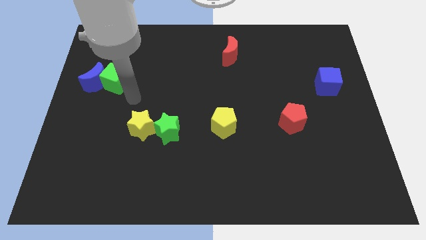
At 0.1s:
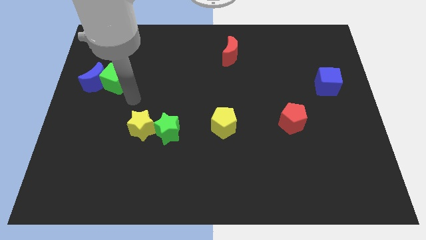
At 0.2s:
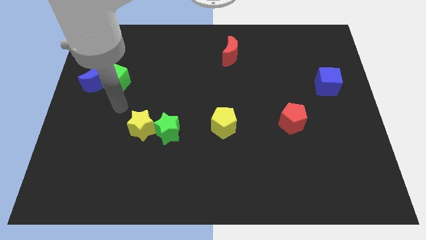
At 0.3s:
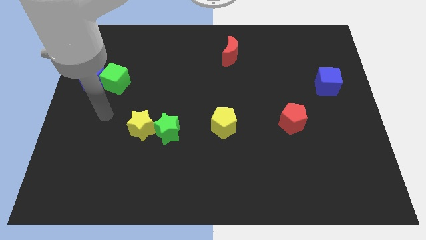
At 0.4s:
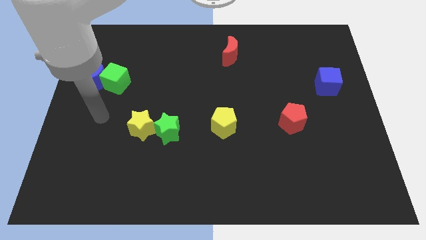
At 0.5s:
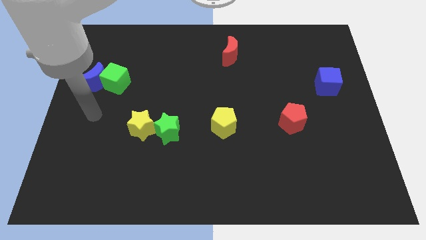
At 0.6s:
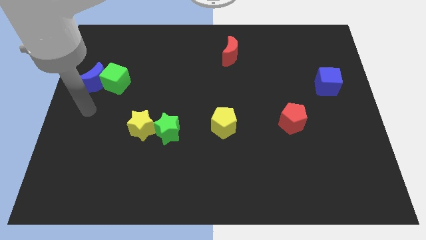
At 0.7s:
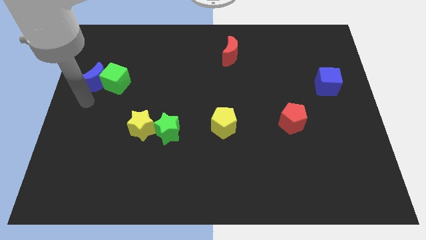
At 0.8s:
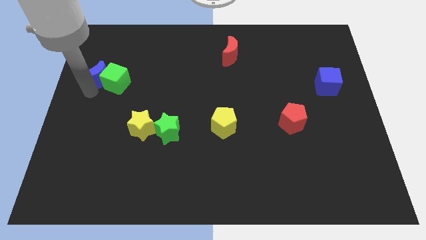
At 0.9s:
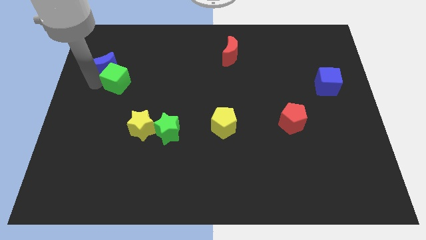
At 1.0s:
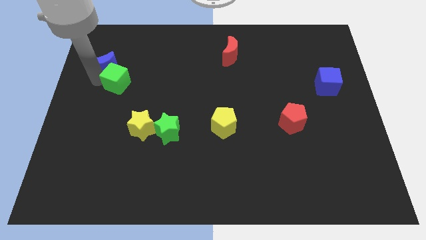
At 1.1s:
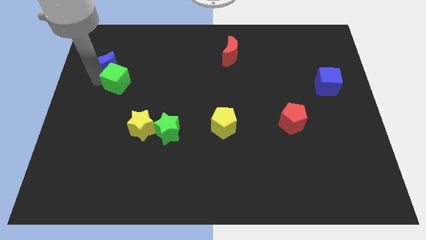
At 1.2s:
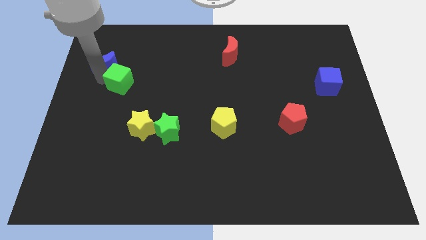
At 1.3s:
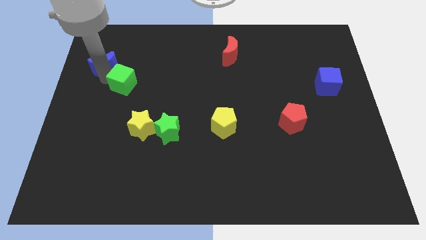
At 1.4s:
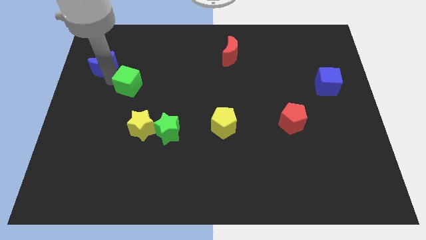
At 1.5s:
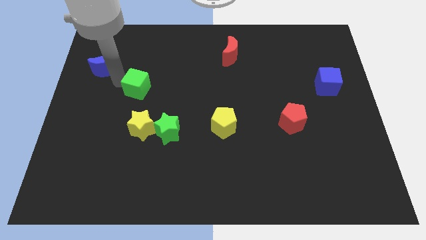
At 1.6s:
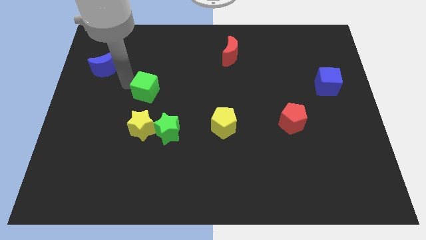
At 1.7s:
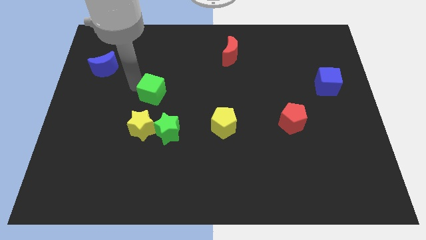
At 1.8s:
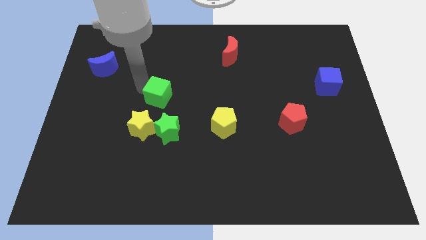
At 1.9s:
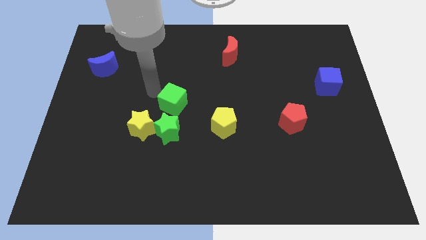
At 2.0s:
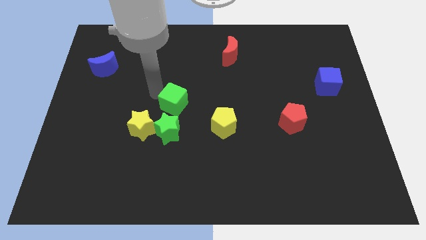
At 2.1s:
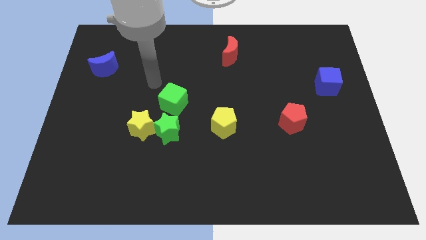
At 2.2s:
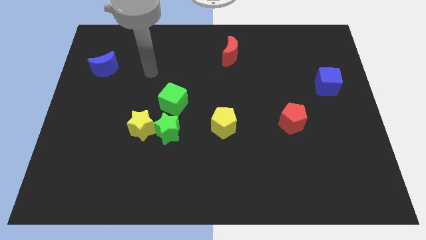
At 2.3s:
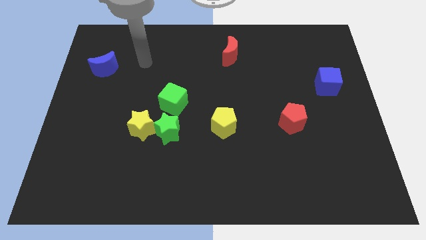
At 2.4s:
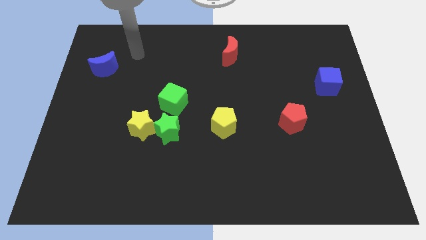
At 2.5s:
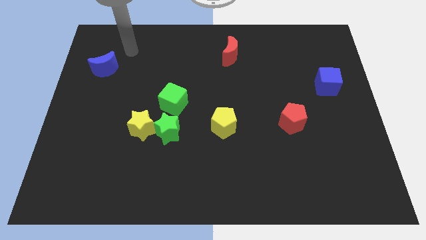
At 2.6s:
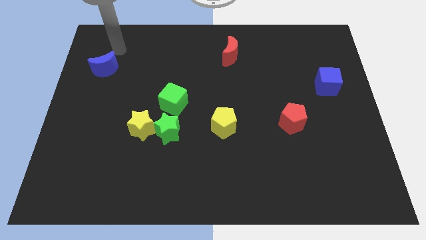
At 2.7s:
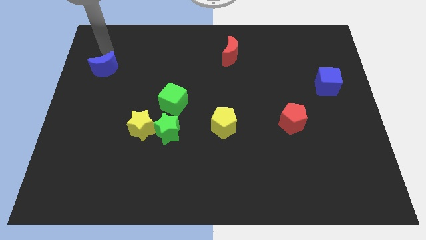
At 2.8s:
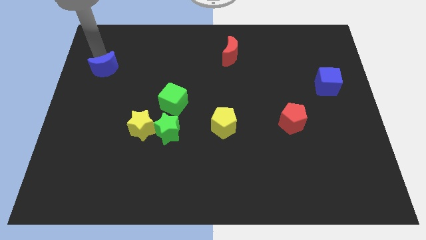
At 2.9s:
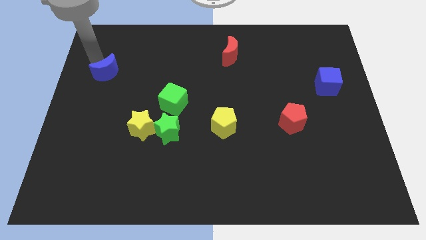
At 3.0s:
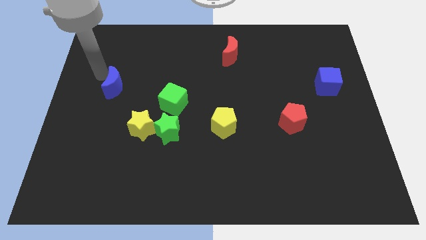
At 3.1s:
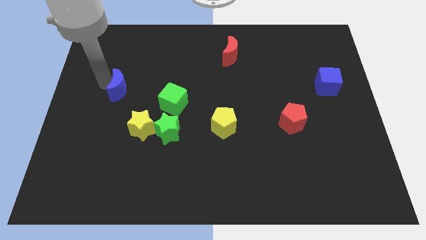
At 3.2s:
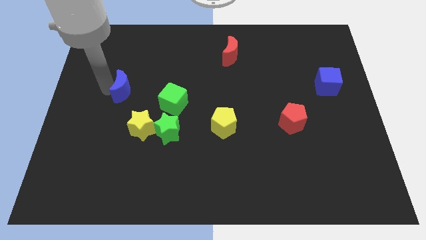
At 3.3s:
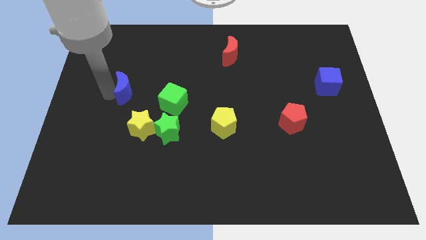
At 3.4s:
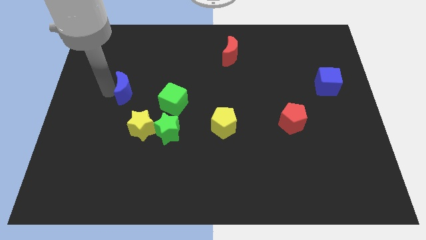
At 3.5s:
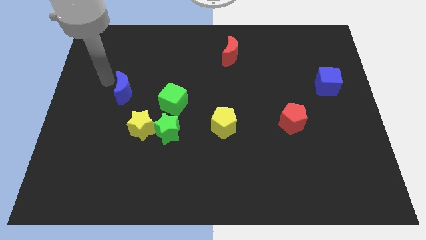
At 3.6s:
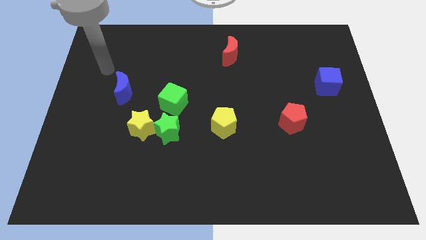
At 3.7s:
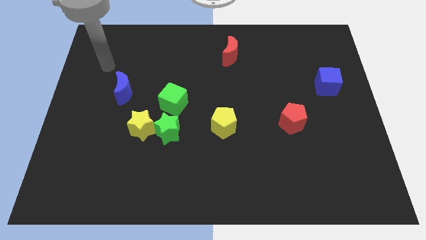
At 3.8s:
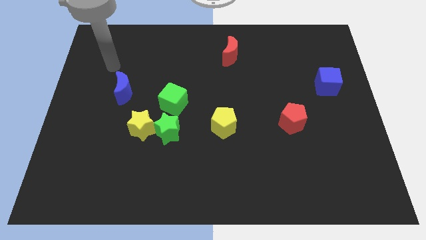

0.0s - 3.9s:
push the blue moon and green cube towards the bottom side of the board

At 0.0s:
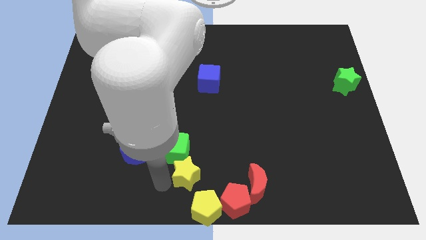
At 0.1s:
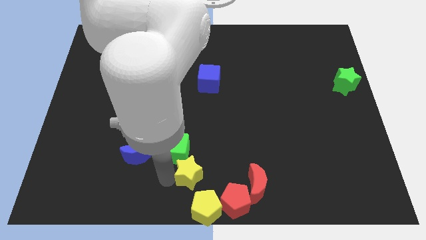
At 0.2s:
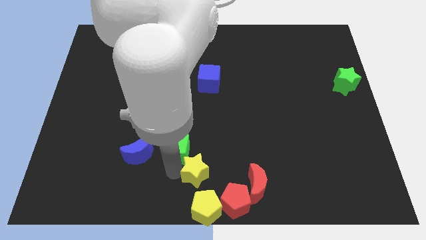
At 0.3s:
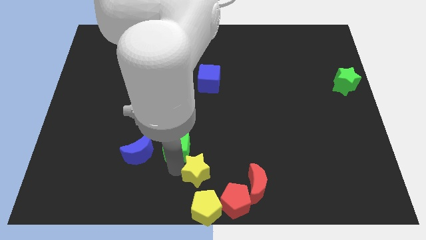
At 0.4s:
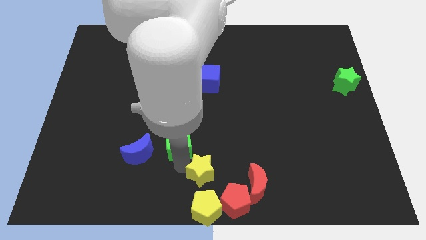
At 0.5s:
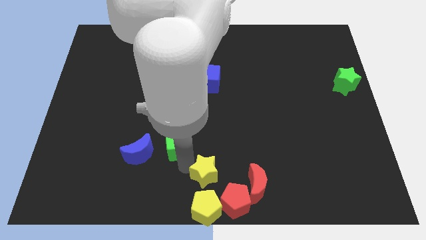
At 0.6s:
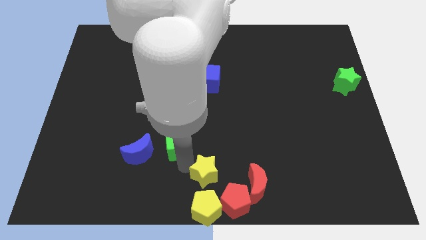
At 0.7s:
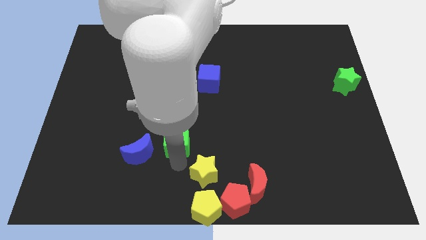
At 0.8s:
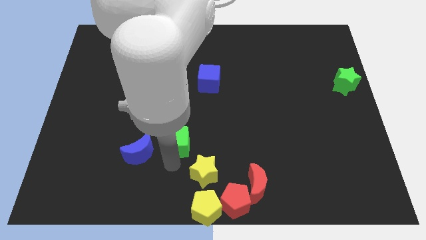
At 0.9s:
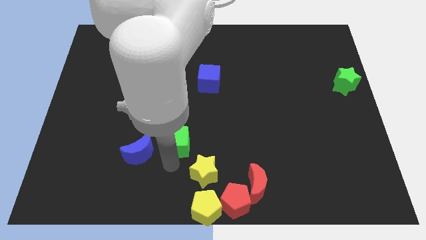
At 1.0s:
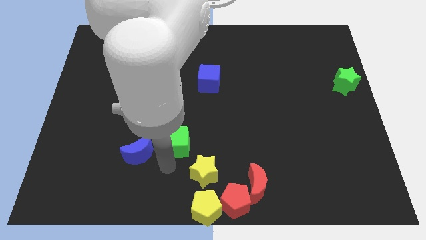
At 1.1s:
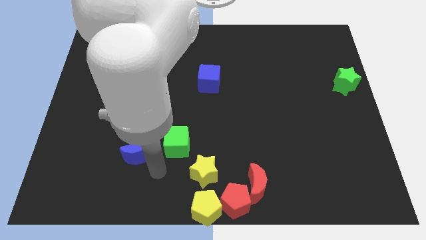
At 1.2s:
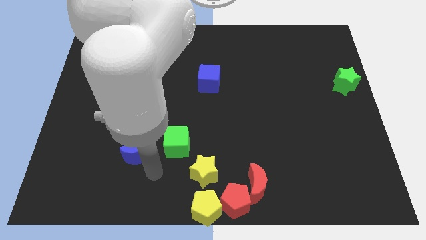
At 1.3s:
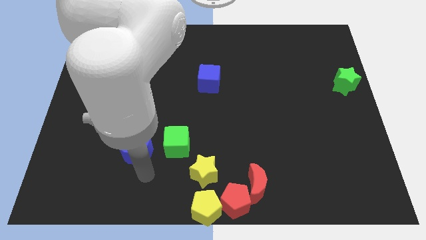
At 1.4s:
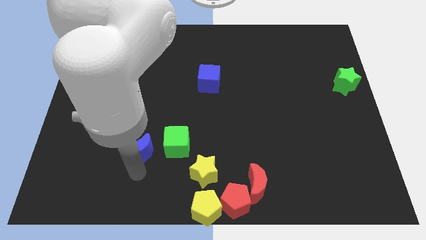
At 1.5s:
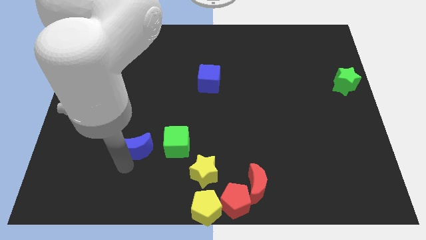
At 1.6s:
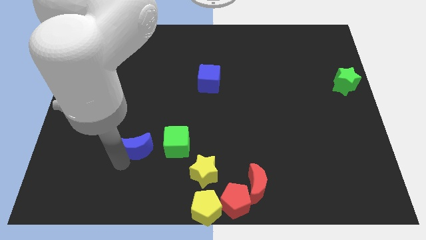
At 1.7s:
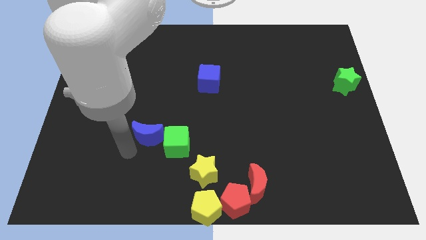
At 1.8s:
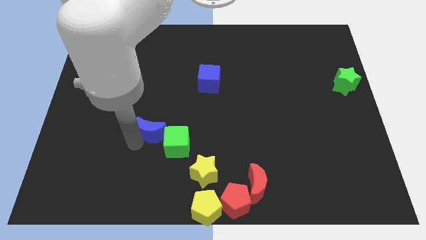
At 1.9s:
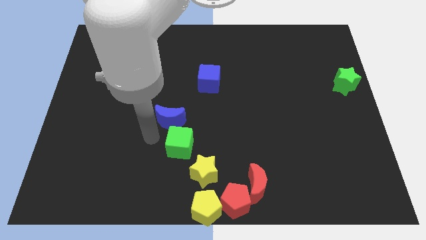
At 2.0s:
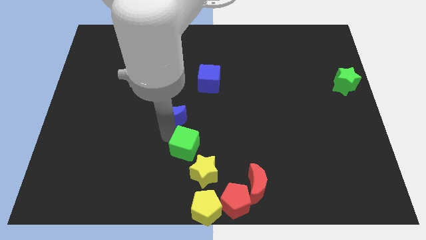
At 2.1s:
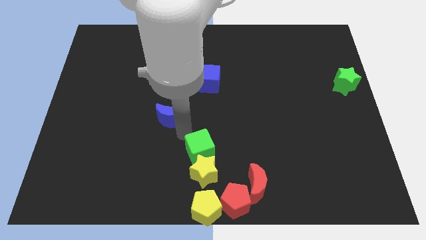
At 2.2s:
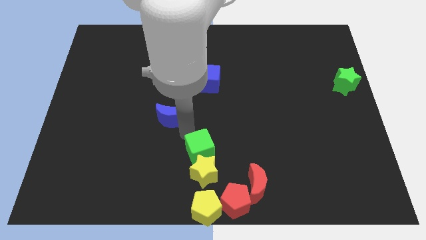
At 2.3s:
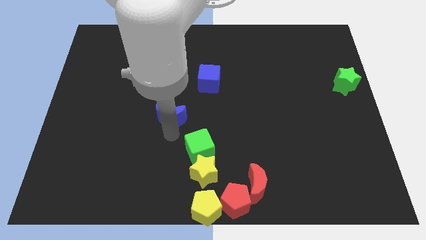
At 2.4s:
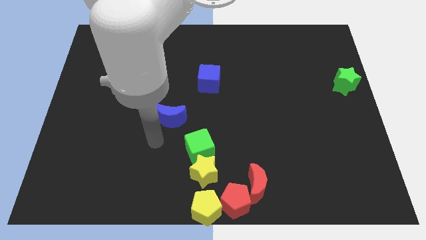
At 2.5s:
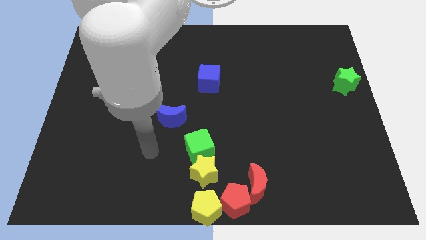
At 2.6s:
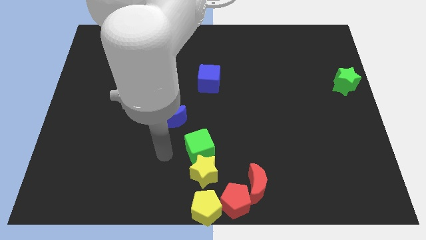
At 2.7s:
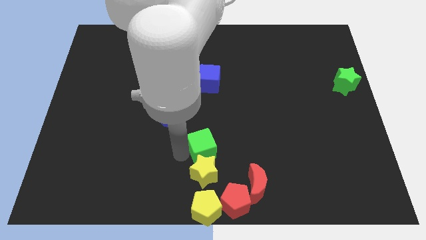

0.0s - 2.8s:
place the green cube above the yellow star

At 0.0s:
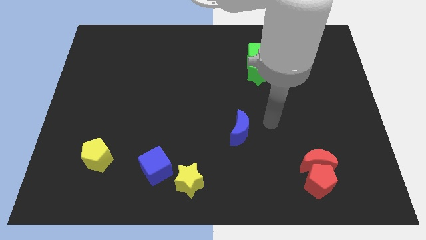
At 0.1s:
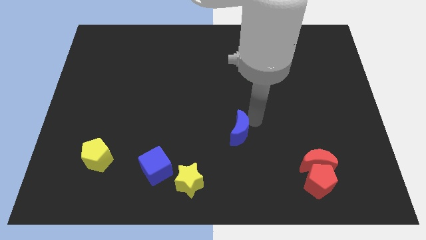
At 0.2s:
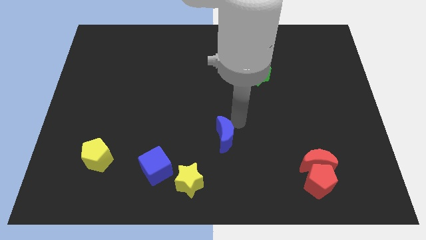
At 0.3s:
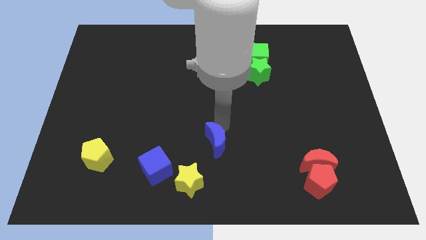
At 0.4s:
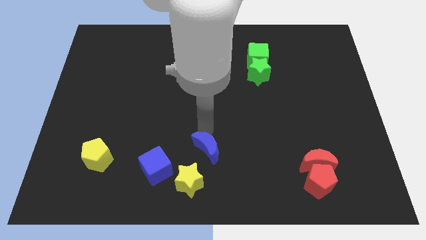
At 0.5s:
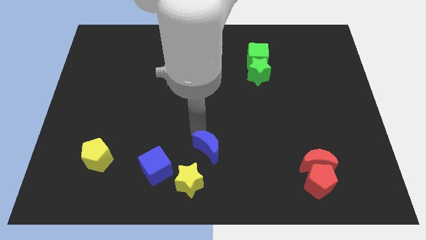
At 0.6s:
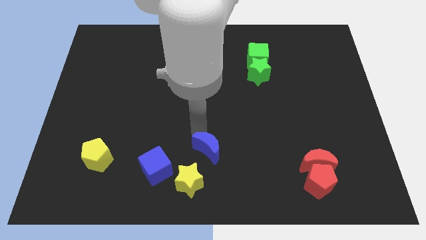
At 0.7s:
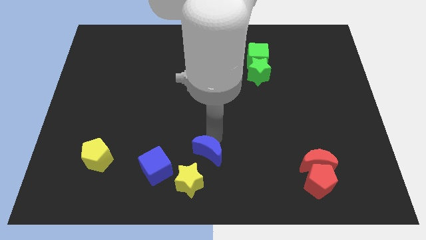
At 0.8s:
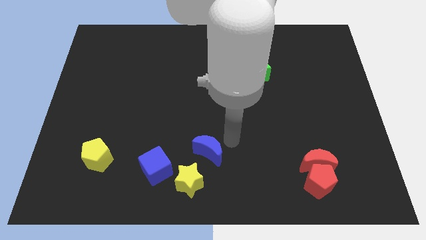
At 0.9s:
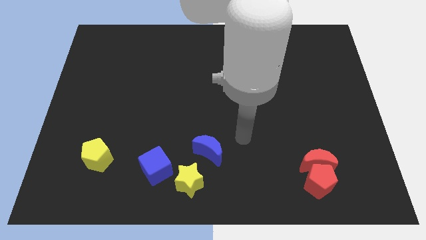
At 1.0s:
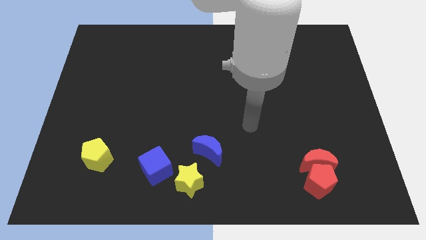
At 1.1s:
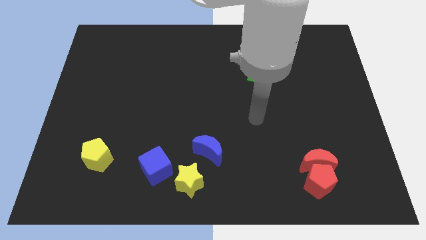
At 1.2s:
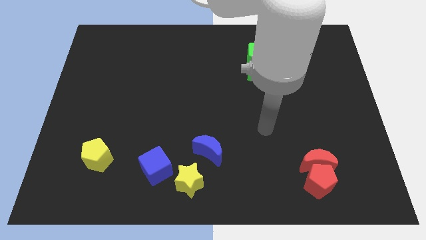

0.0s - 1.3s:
put the blue moon diagonally right to the yellow star

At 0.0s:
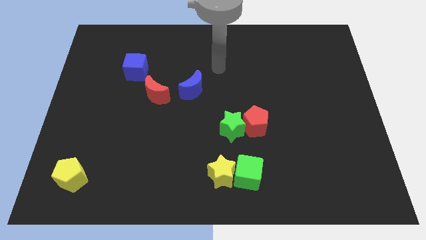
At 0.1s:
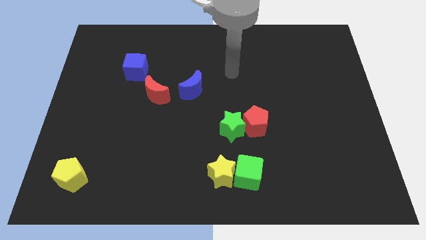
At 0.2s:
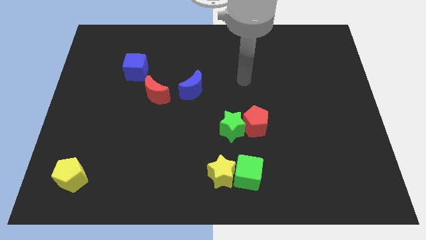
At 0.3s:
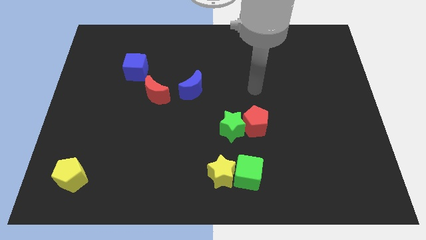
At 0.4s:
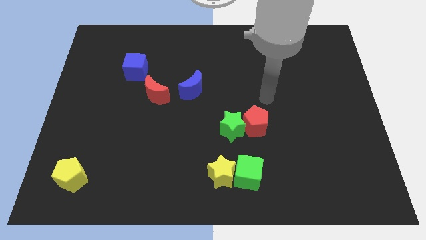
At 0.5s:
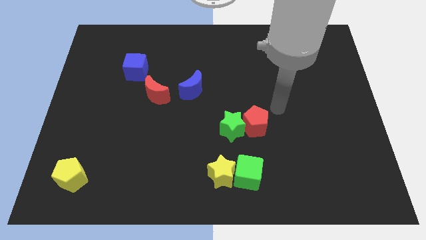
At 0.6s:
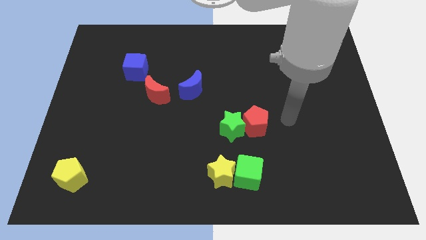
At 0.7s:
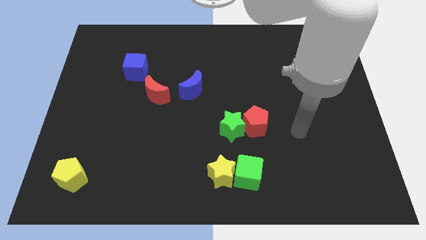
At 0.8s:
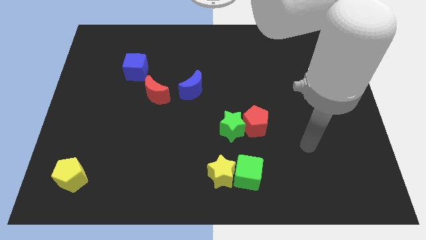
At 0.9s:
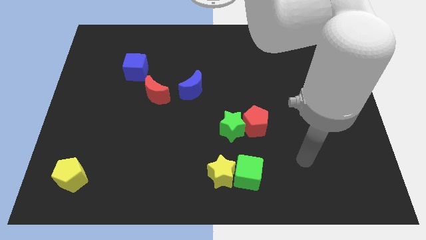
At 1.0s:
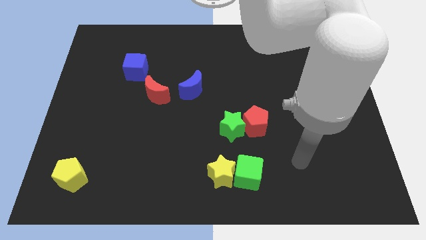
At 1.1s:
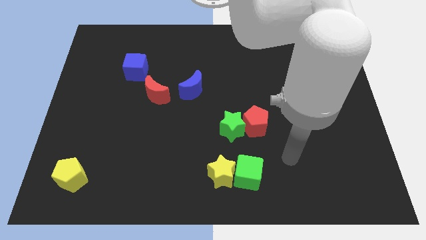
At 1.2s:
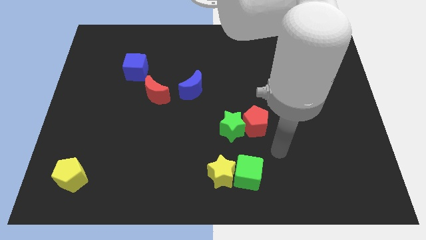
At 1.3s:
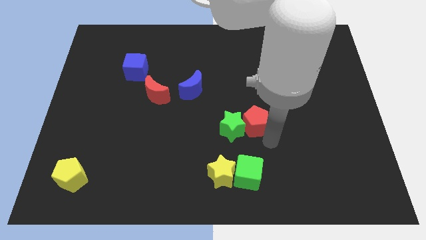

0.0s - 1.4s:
point your arm at the bottom right side of the red pentagon
